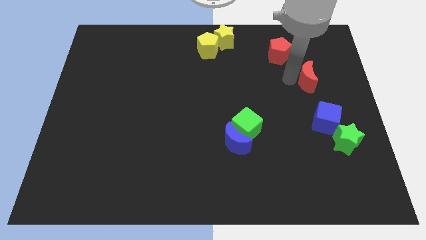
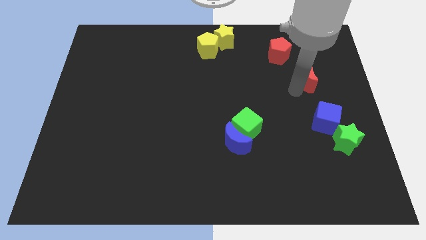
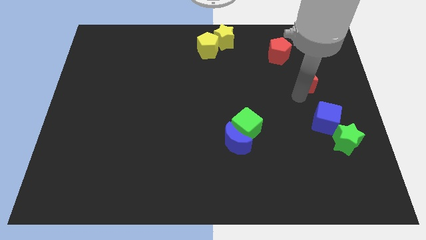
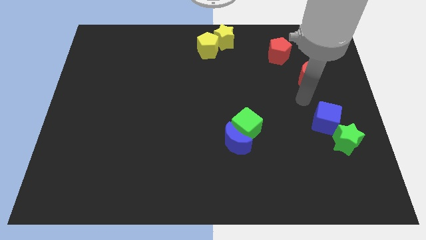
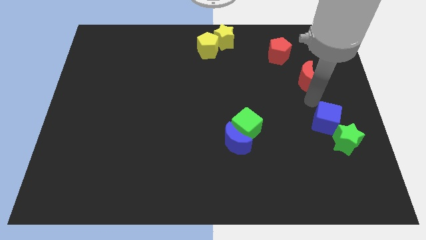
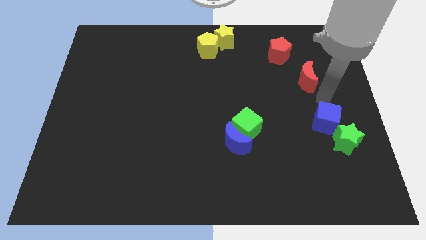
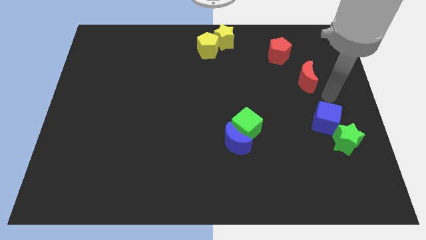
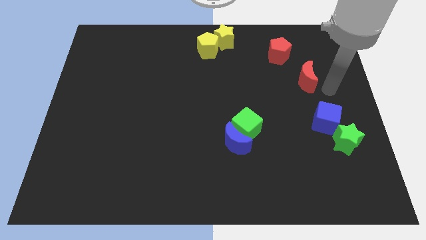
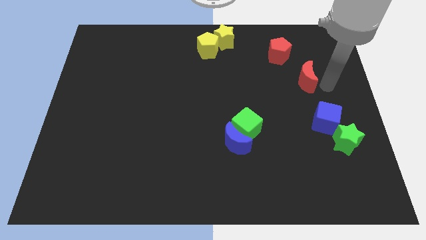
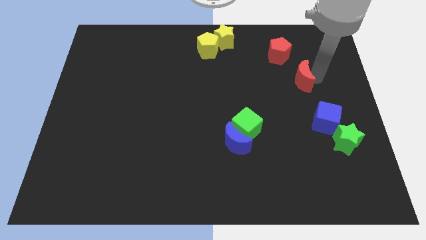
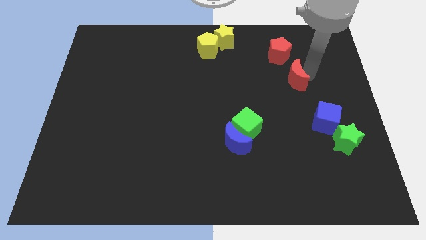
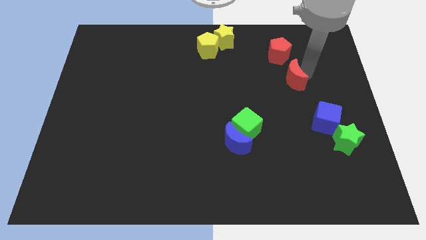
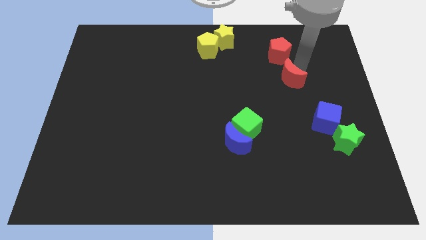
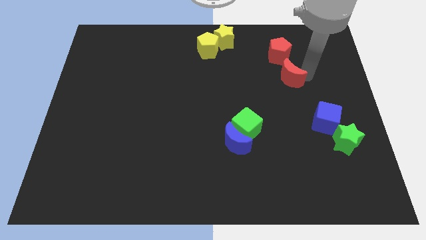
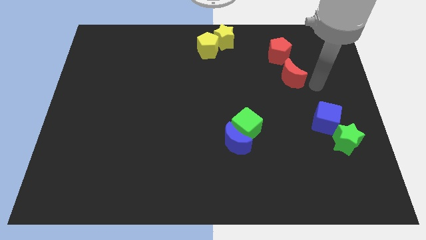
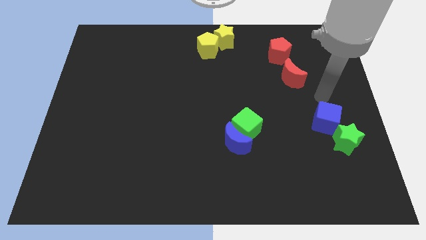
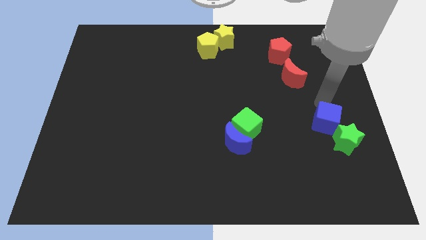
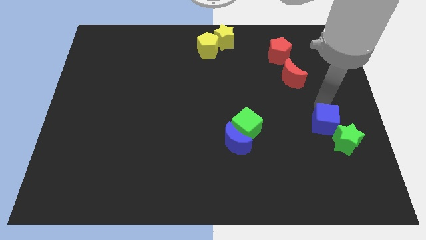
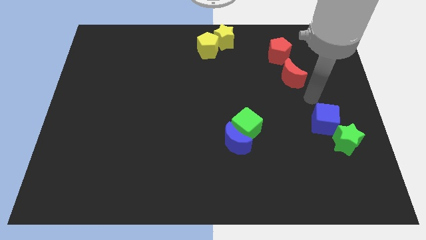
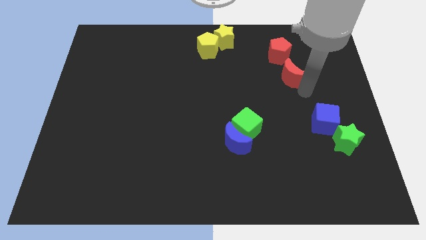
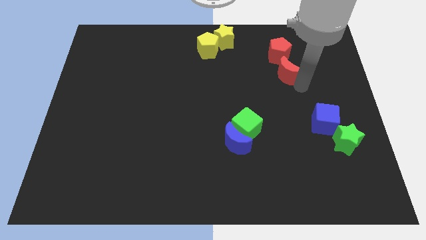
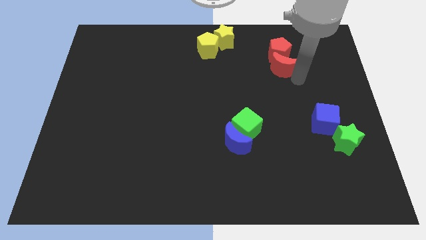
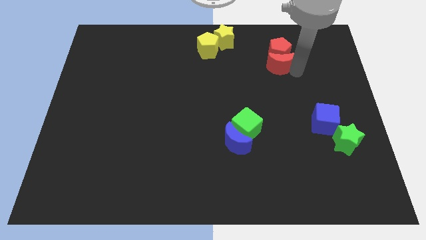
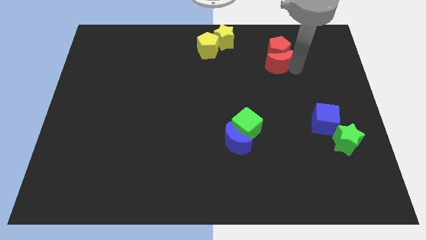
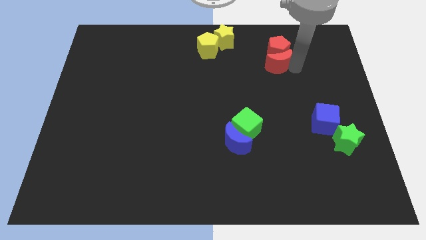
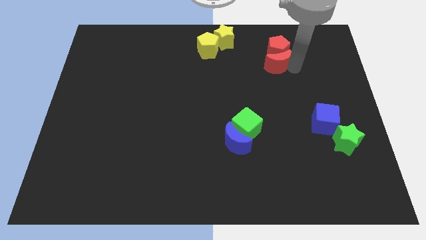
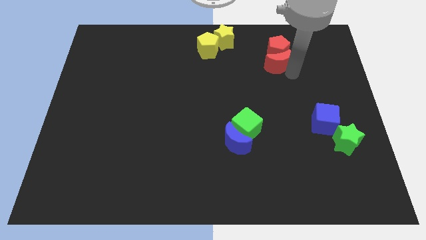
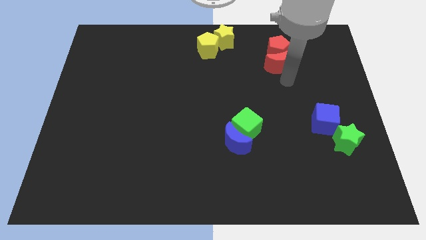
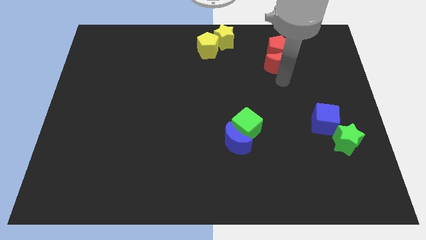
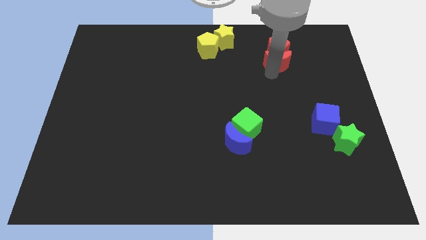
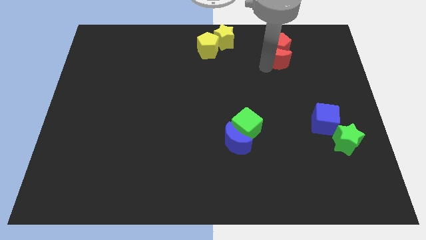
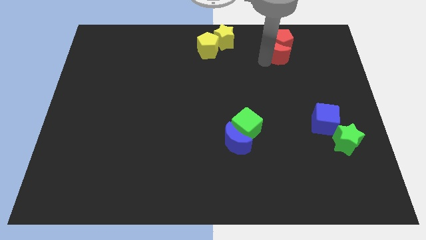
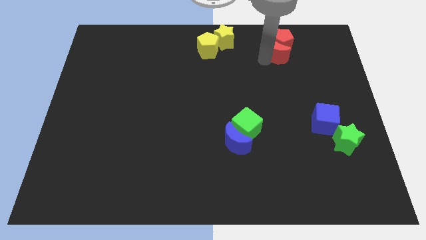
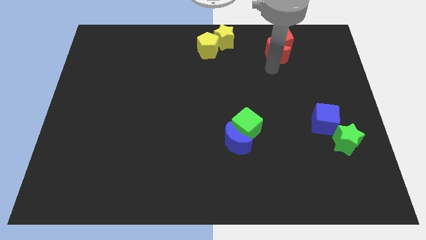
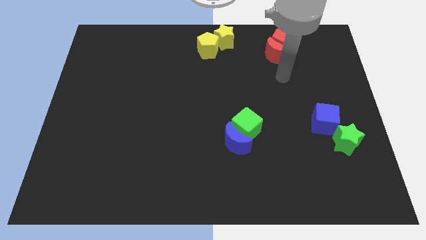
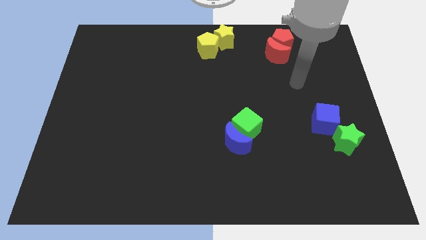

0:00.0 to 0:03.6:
push the red pentagon with the red crescent towards the top

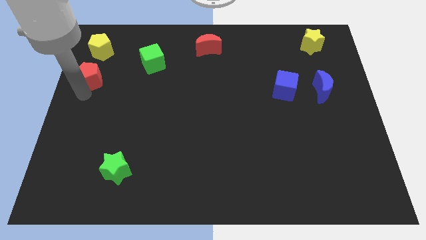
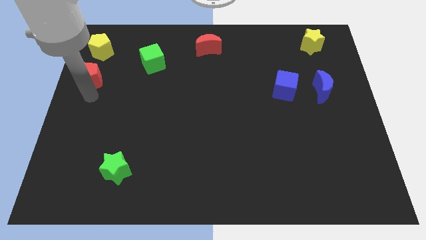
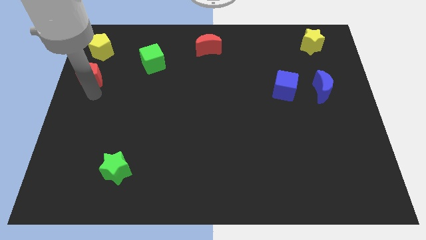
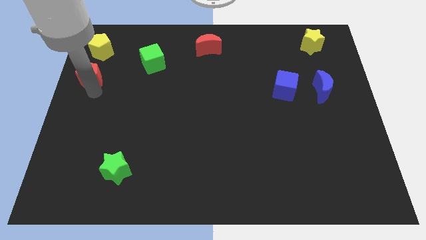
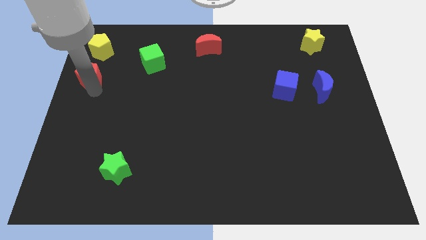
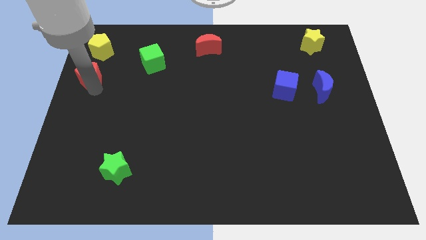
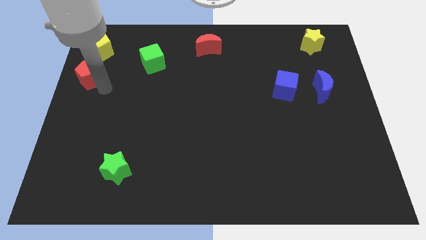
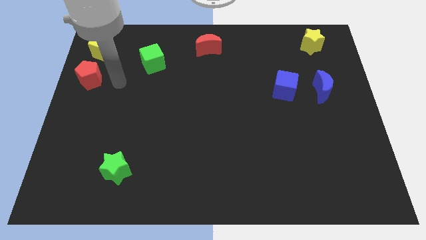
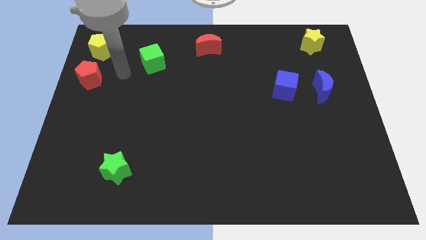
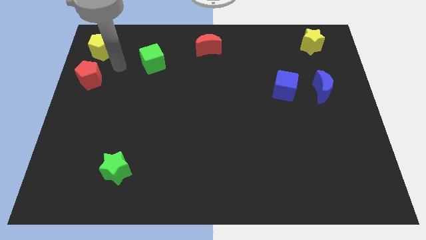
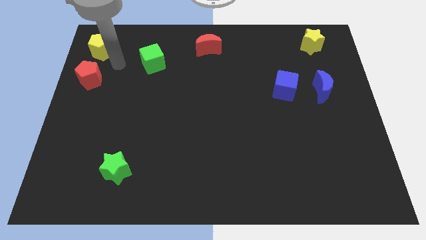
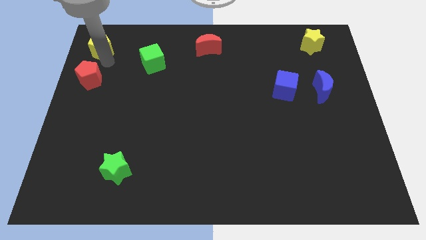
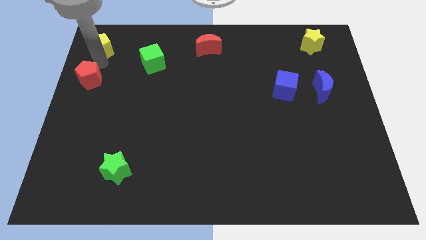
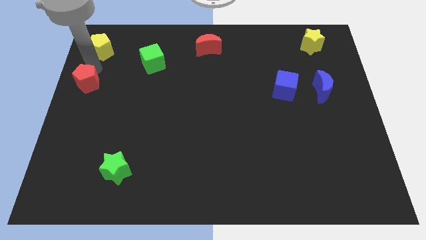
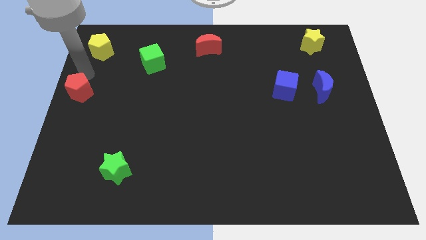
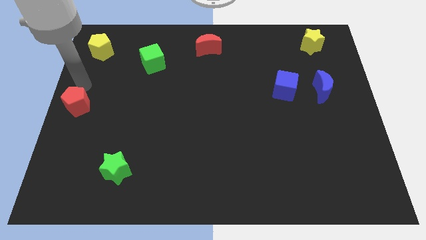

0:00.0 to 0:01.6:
place the red pentagon at the left center of the board

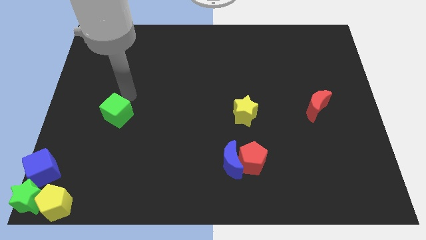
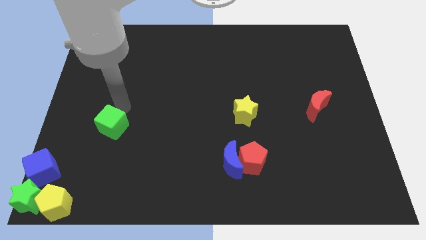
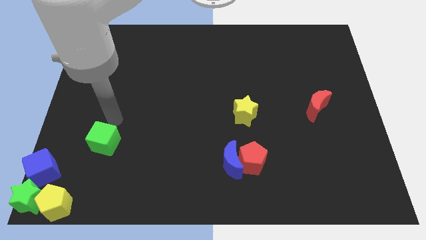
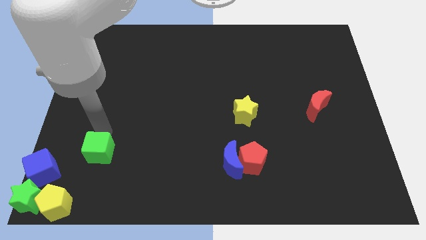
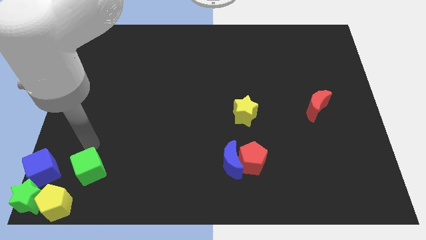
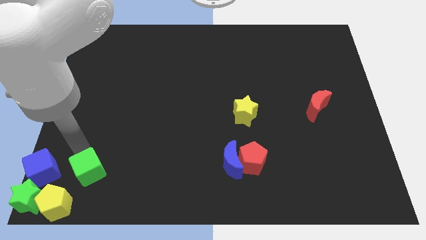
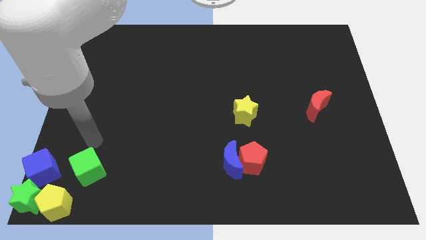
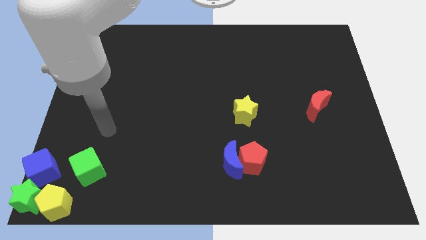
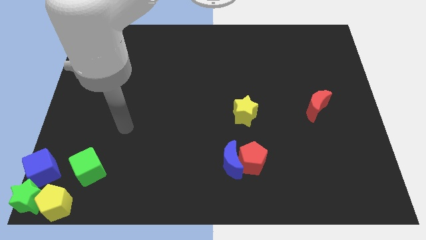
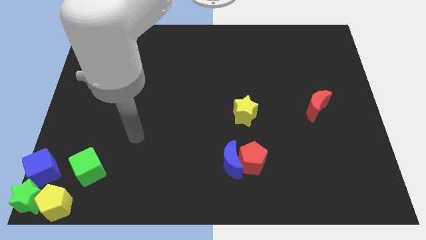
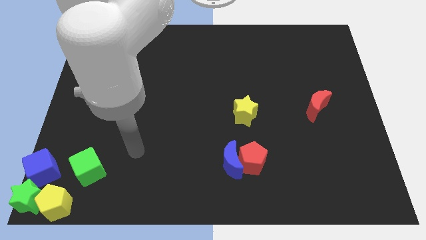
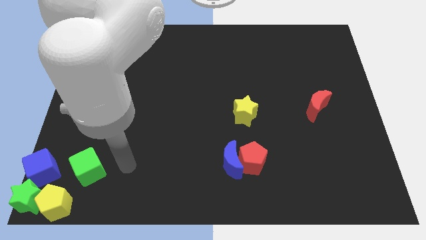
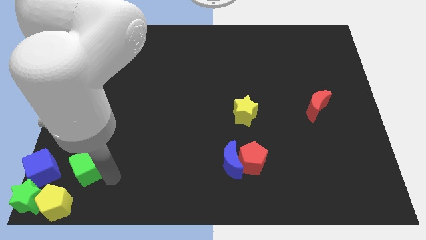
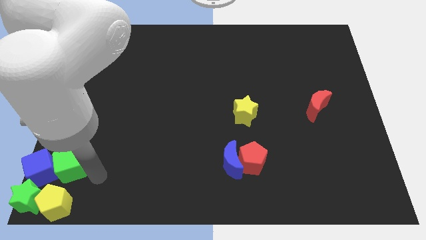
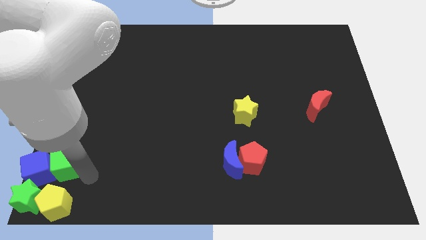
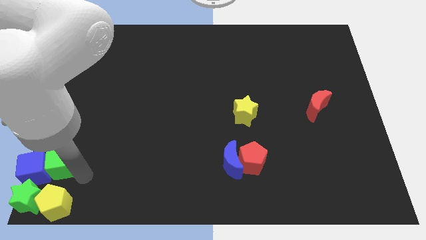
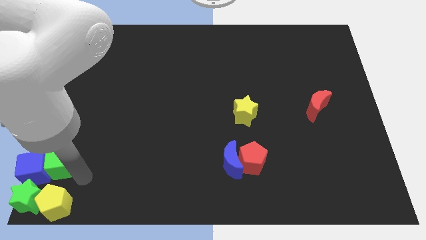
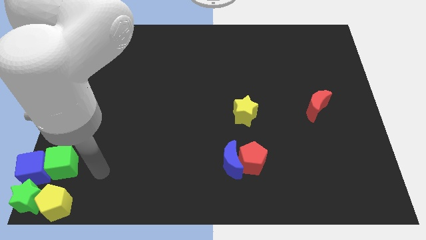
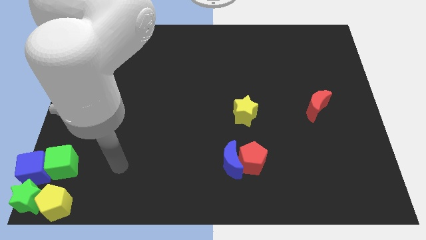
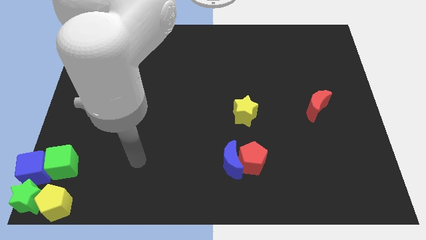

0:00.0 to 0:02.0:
push the green cube towards the right side of the blue cube

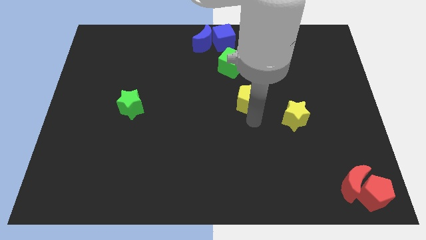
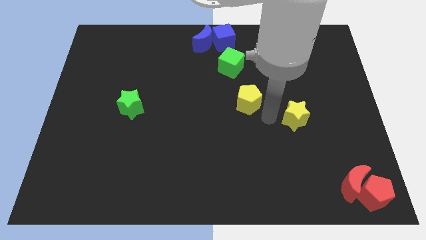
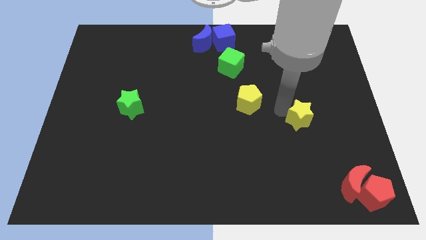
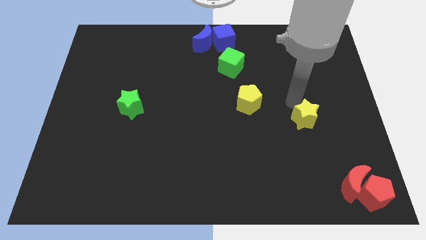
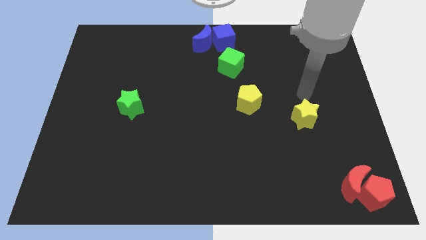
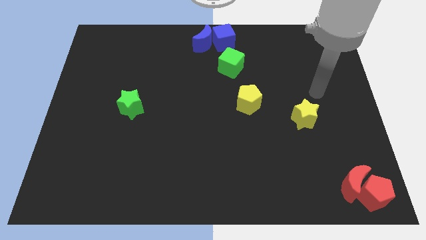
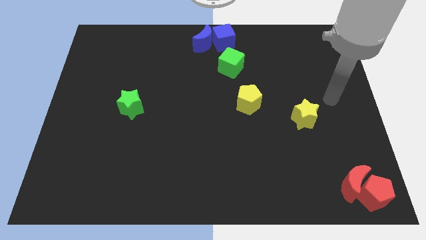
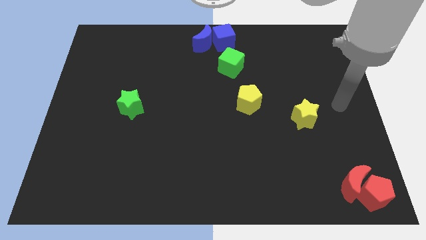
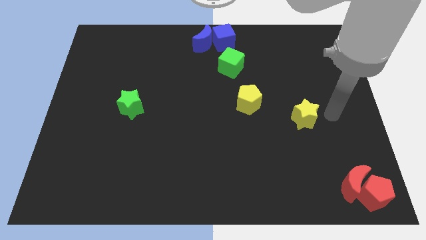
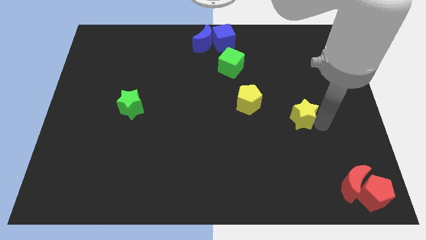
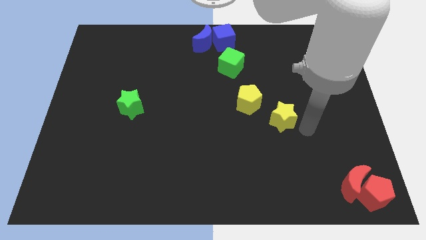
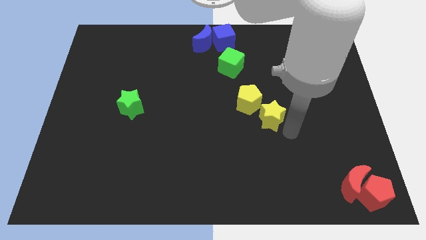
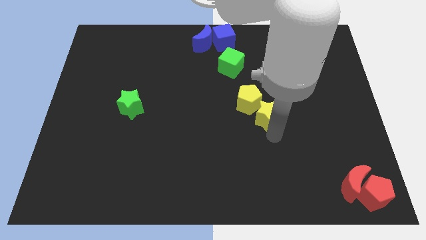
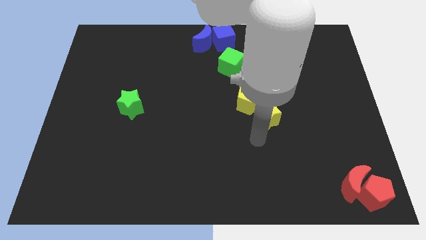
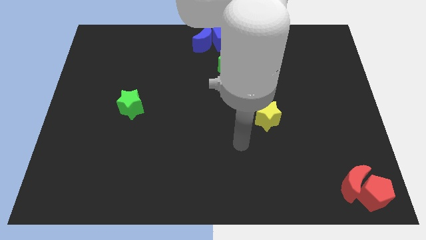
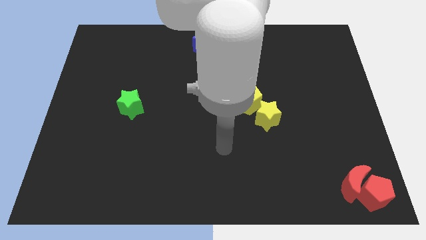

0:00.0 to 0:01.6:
drag the yellow star close to the yellow pentagon
